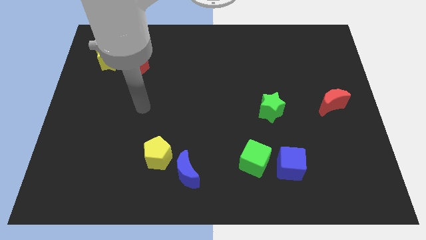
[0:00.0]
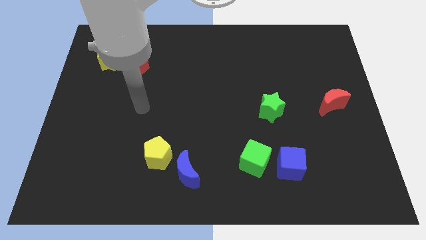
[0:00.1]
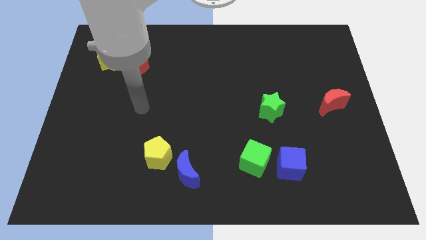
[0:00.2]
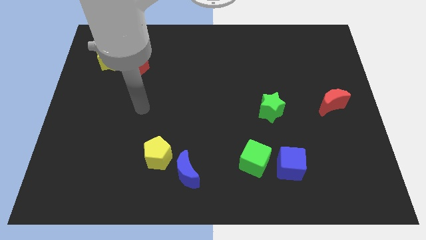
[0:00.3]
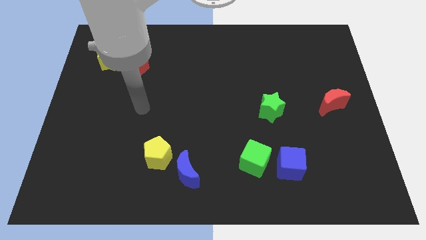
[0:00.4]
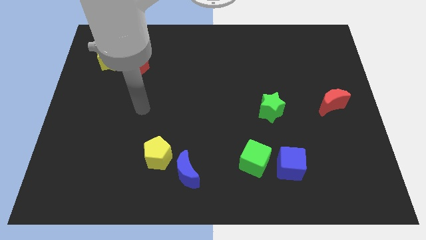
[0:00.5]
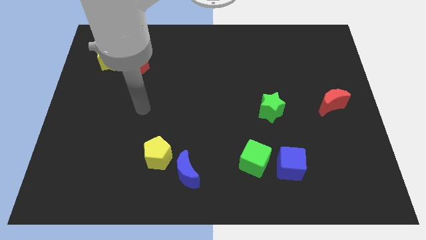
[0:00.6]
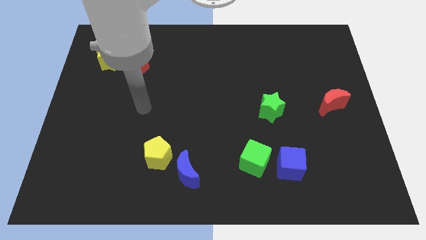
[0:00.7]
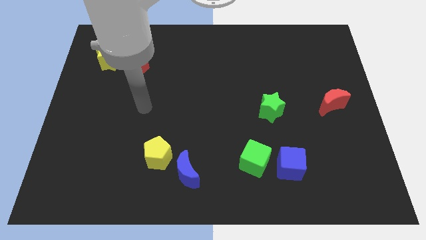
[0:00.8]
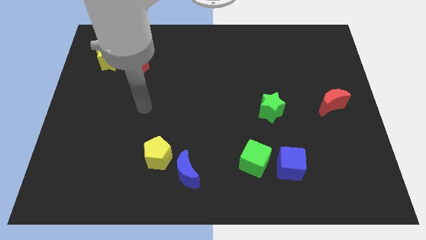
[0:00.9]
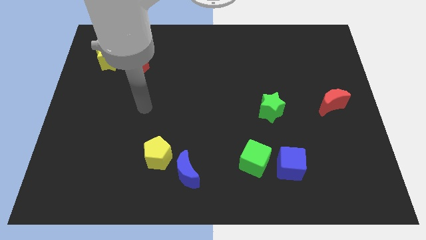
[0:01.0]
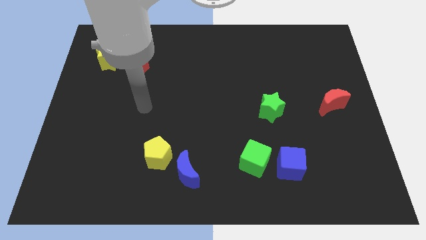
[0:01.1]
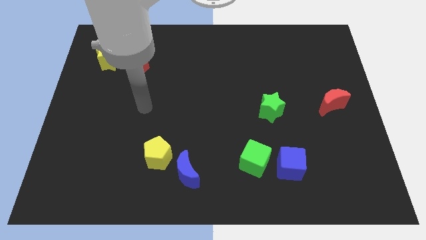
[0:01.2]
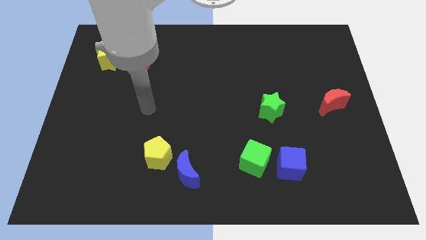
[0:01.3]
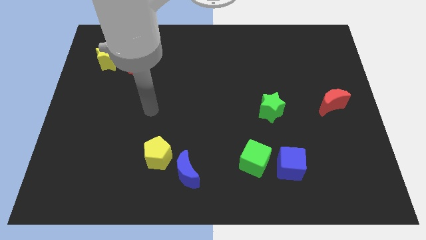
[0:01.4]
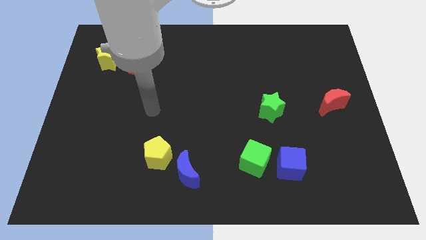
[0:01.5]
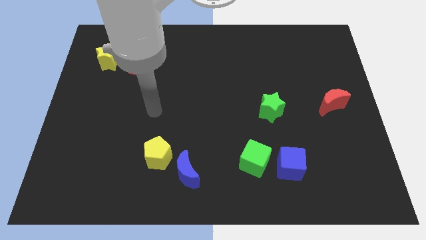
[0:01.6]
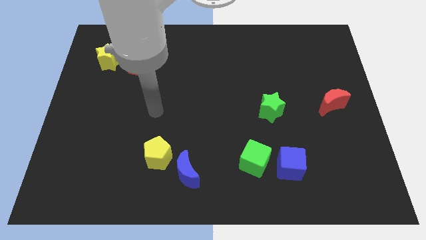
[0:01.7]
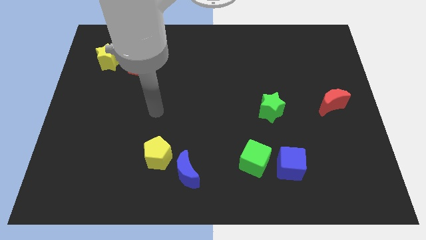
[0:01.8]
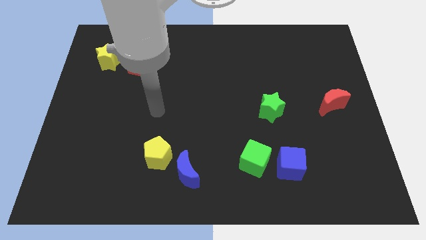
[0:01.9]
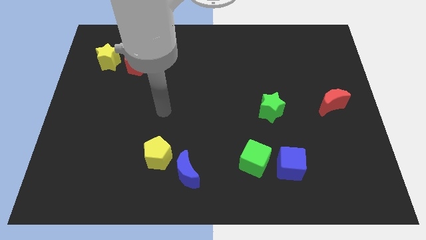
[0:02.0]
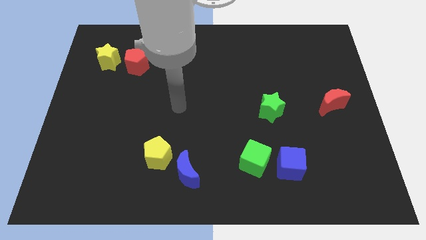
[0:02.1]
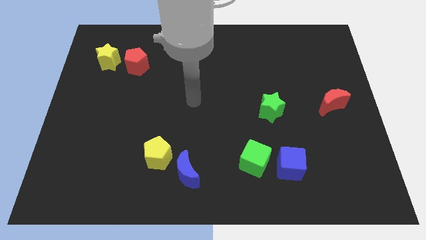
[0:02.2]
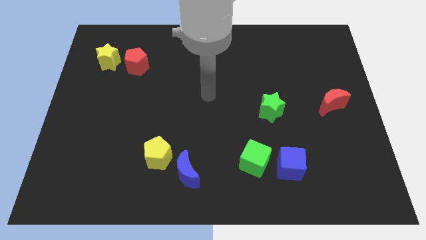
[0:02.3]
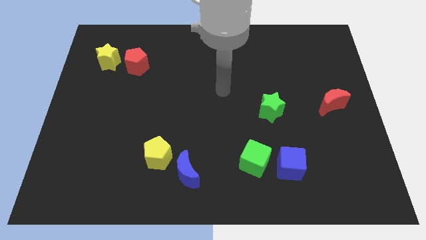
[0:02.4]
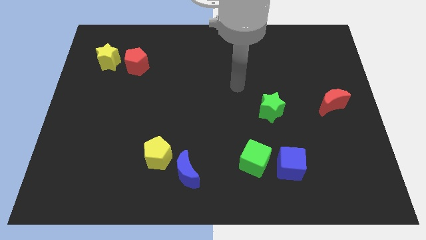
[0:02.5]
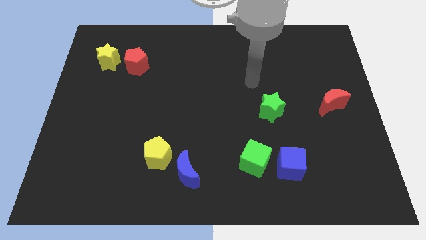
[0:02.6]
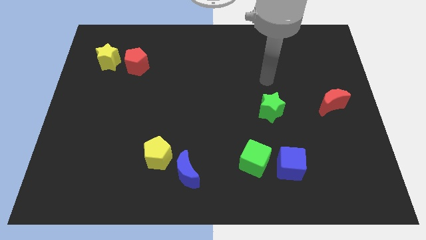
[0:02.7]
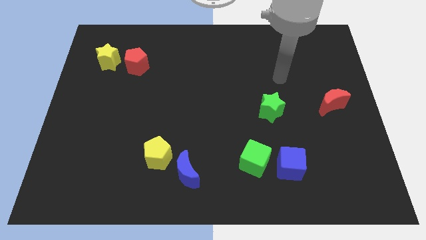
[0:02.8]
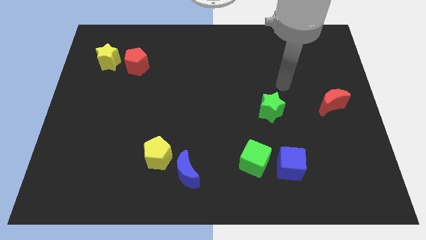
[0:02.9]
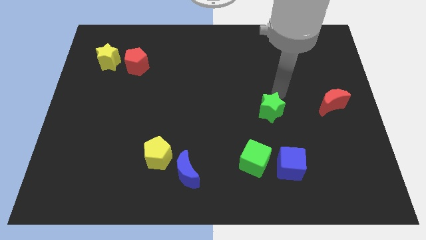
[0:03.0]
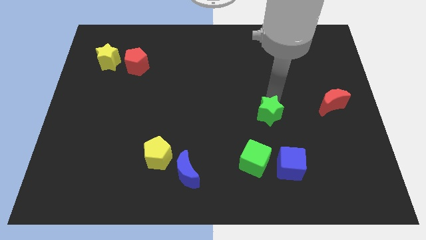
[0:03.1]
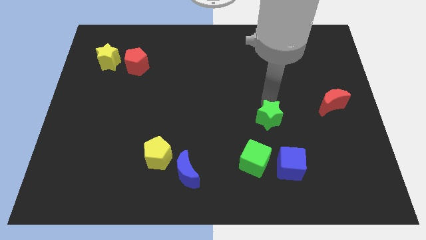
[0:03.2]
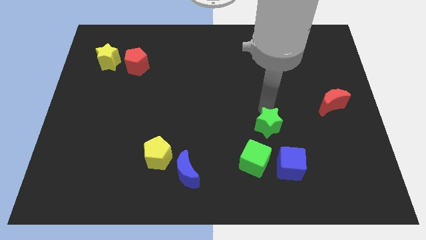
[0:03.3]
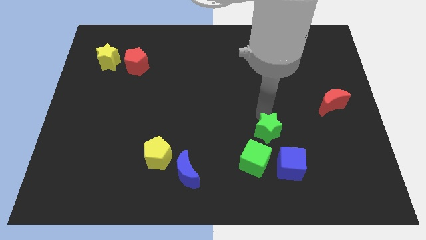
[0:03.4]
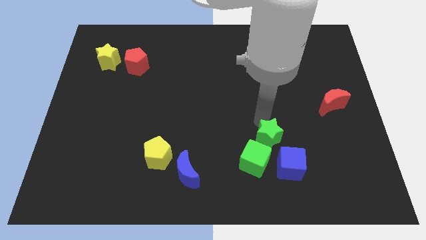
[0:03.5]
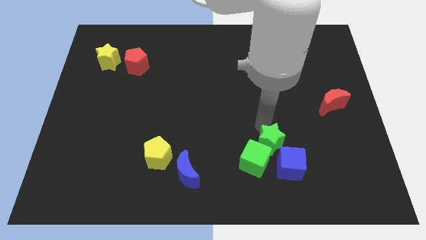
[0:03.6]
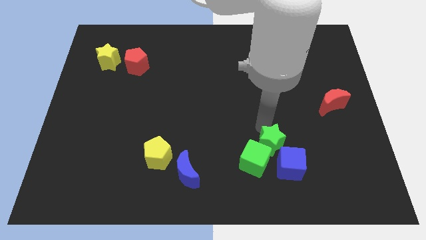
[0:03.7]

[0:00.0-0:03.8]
push the green star close to the green cube

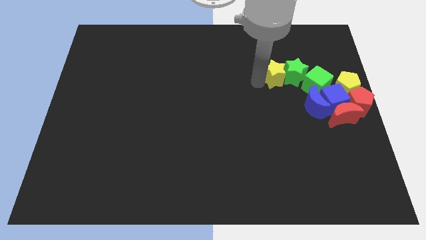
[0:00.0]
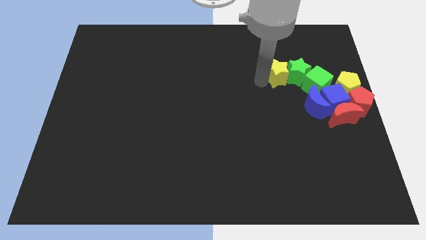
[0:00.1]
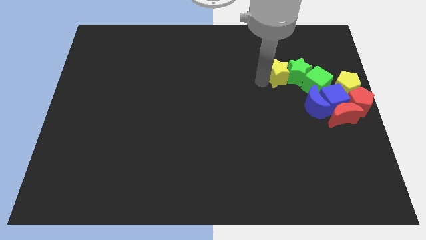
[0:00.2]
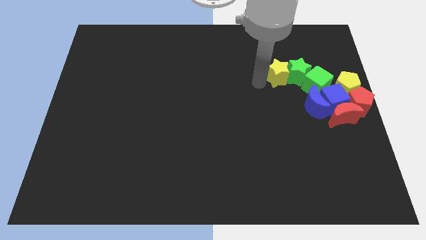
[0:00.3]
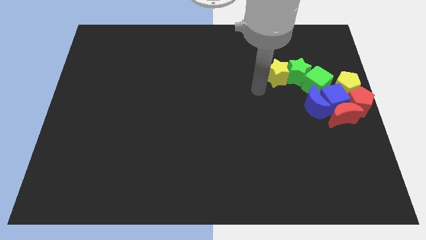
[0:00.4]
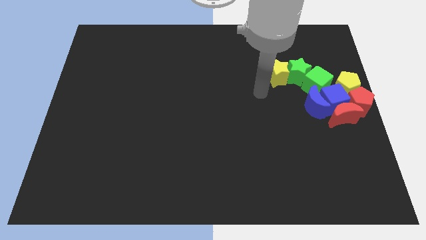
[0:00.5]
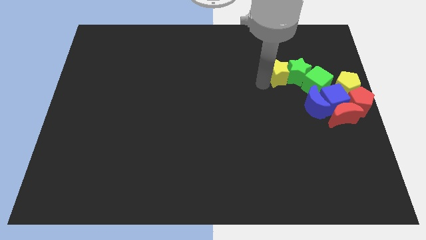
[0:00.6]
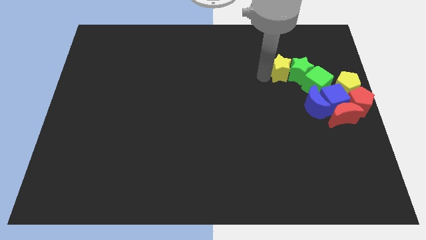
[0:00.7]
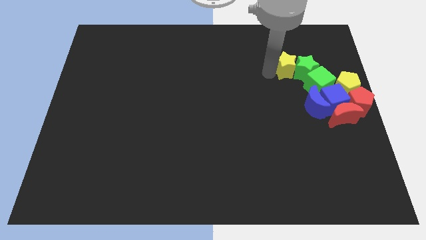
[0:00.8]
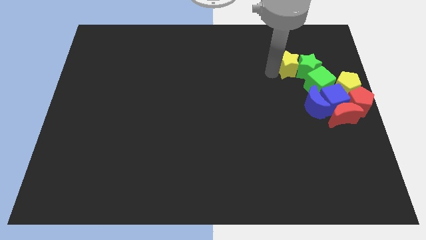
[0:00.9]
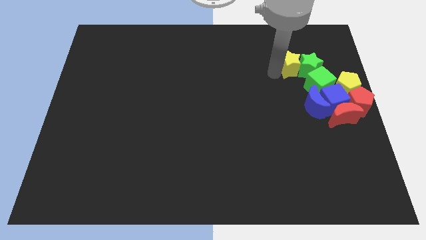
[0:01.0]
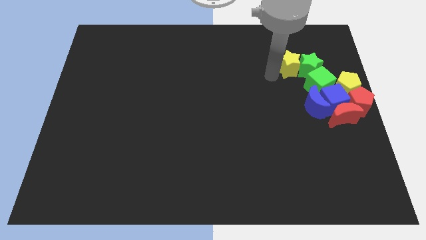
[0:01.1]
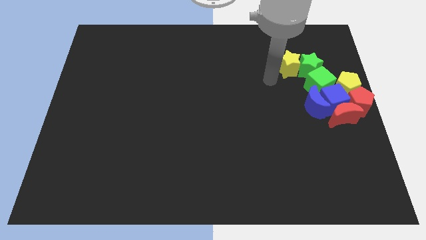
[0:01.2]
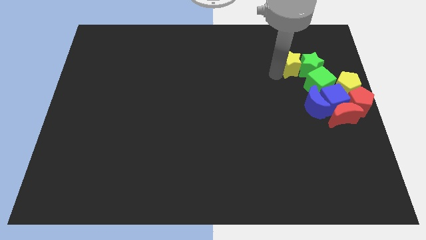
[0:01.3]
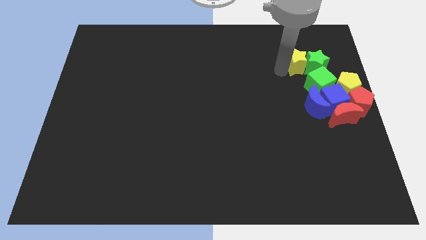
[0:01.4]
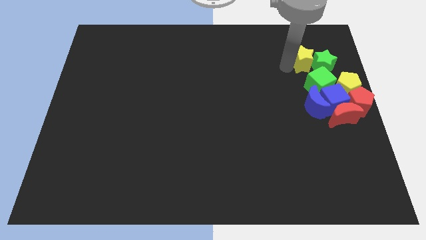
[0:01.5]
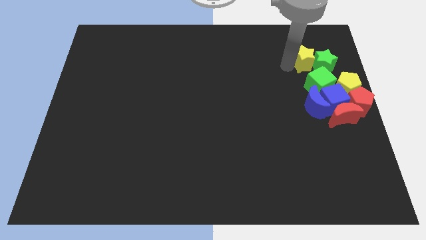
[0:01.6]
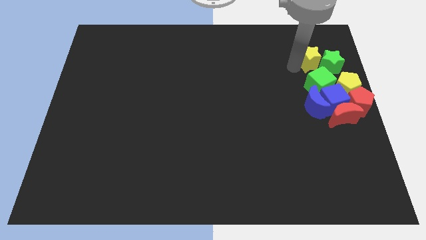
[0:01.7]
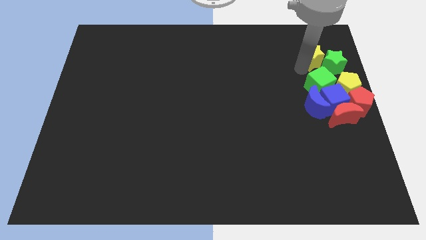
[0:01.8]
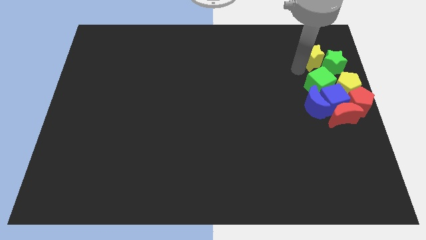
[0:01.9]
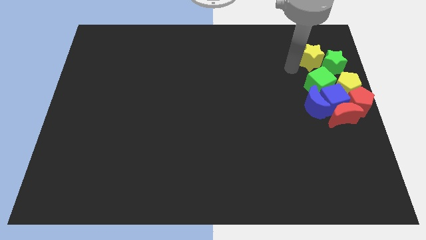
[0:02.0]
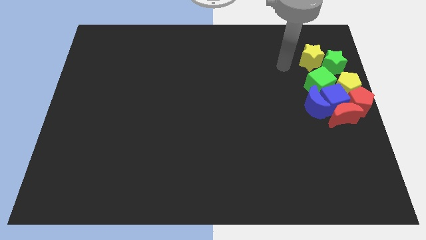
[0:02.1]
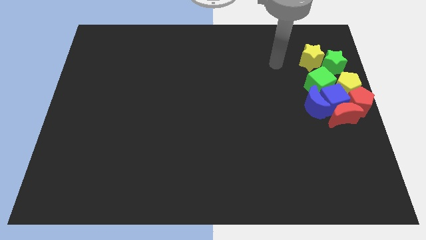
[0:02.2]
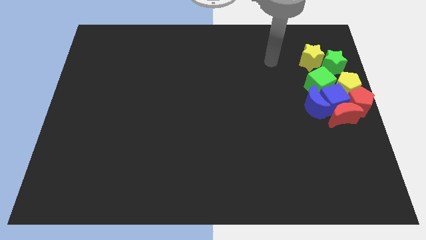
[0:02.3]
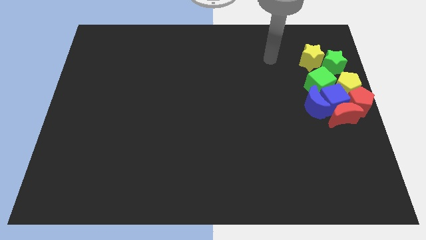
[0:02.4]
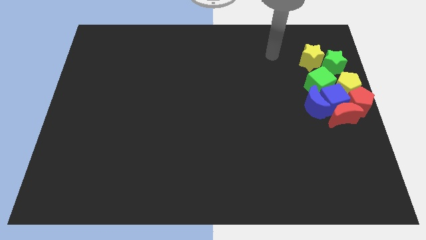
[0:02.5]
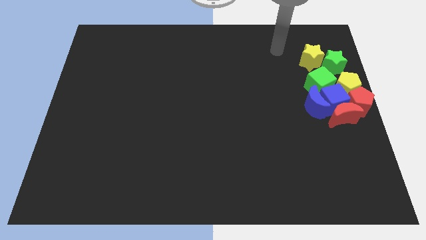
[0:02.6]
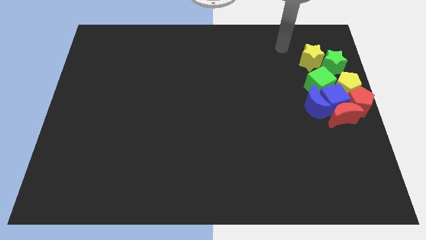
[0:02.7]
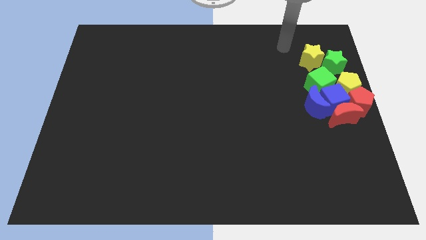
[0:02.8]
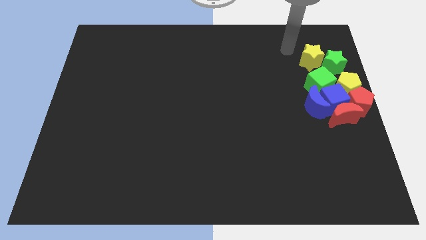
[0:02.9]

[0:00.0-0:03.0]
move yellow star towards the top right side

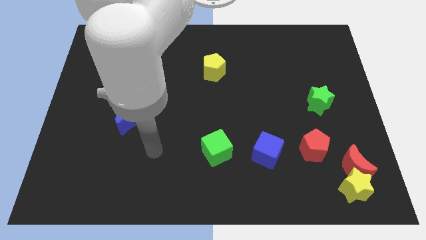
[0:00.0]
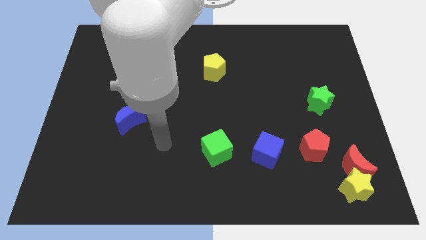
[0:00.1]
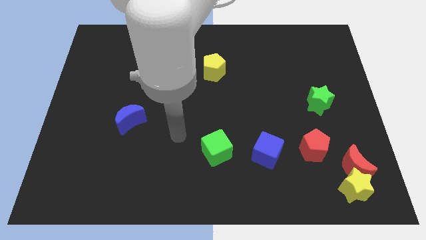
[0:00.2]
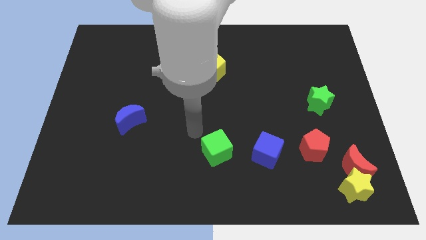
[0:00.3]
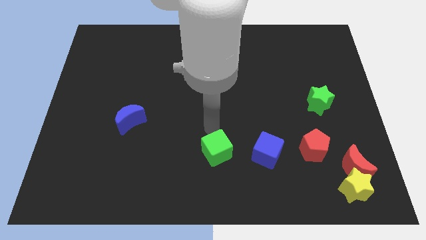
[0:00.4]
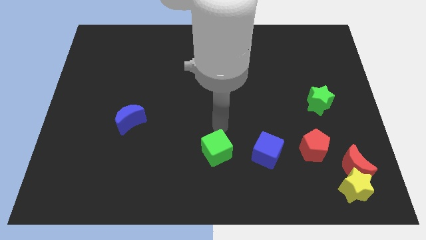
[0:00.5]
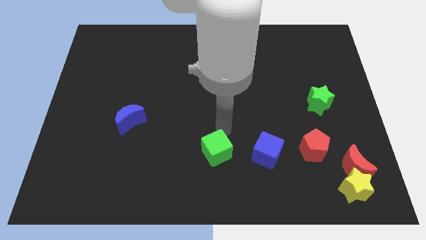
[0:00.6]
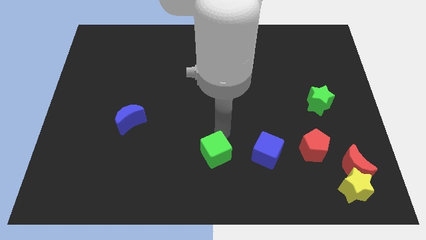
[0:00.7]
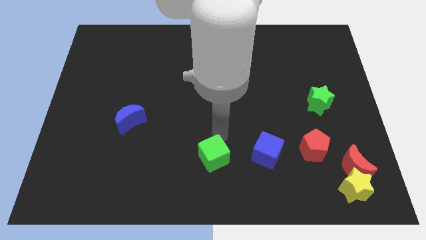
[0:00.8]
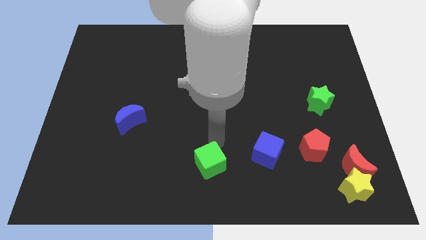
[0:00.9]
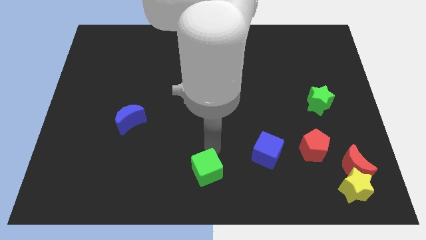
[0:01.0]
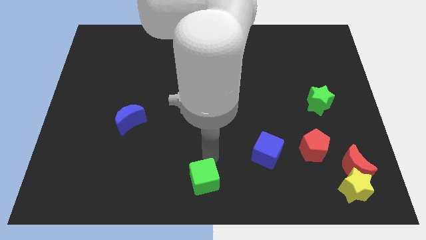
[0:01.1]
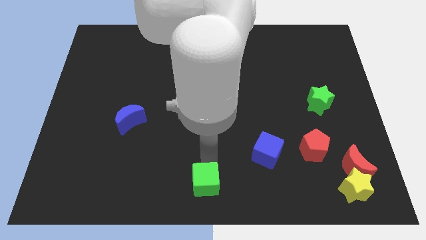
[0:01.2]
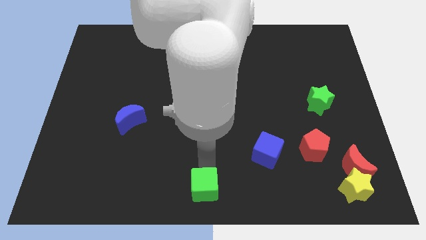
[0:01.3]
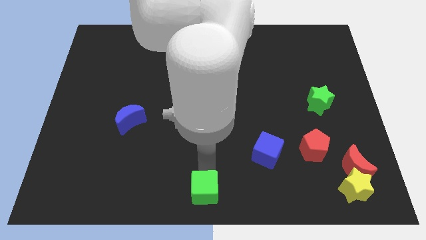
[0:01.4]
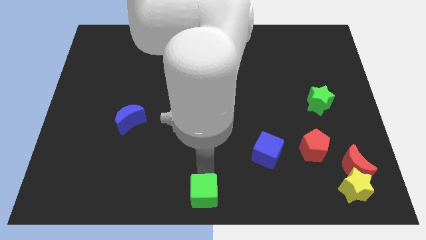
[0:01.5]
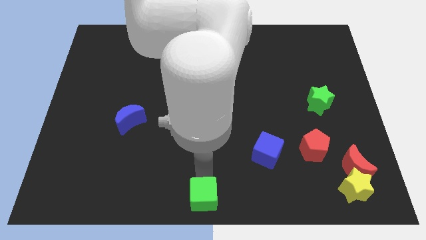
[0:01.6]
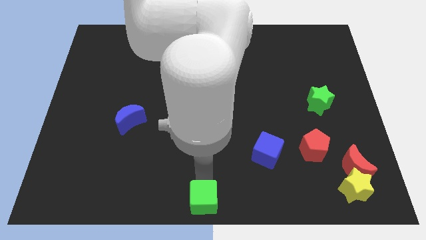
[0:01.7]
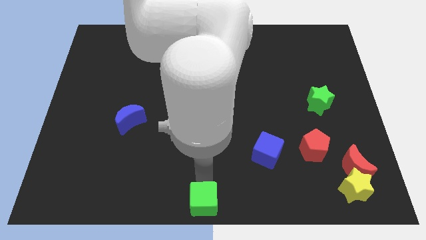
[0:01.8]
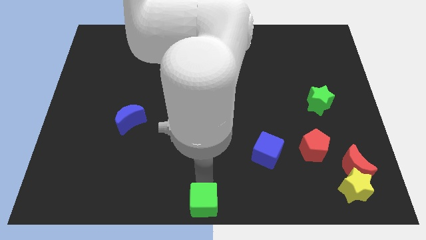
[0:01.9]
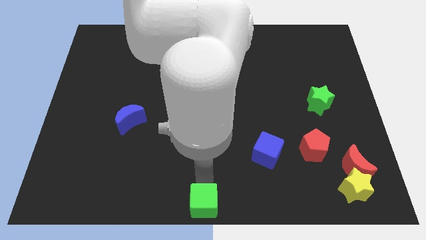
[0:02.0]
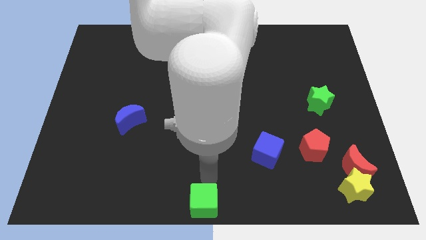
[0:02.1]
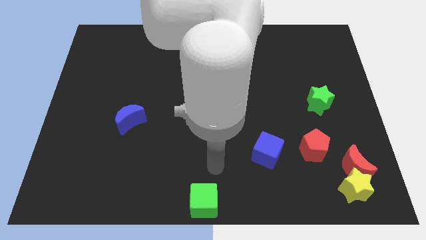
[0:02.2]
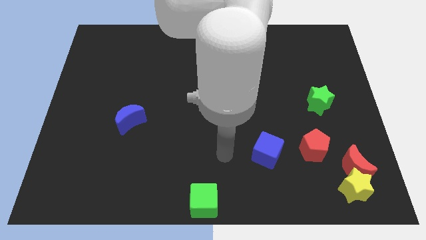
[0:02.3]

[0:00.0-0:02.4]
push the green cube to the bottom center
